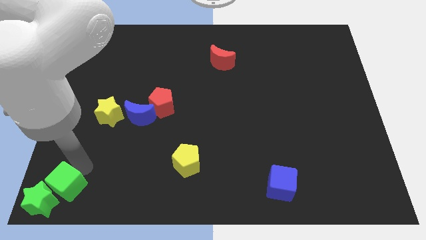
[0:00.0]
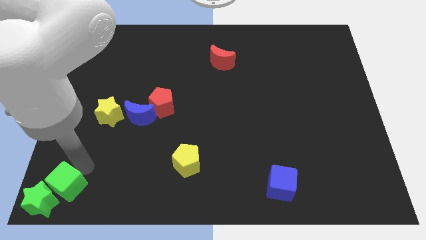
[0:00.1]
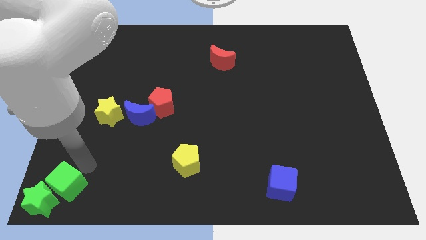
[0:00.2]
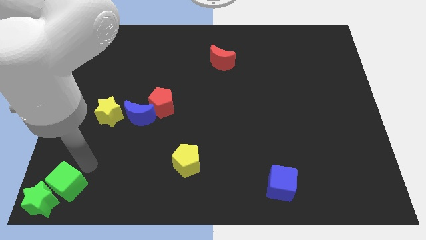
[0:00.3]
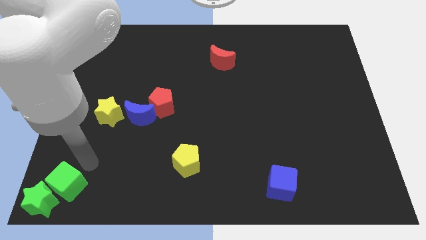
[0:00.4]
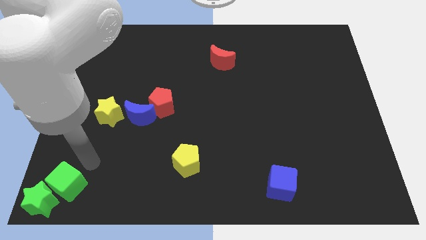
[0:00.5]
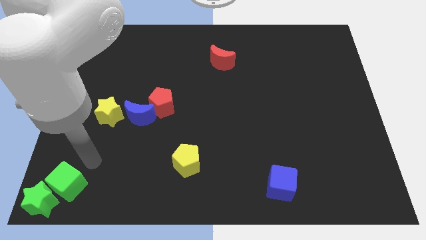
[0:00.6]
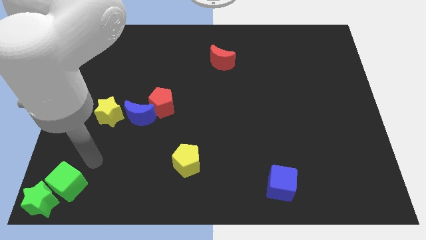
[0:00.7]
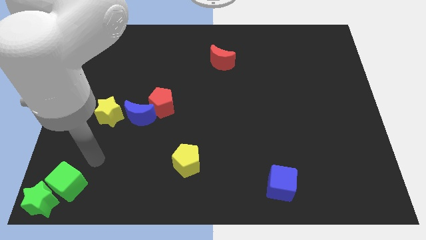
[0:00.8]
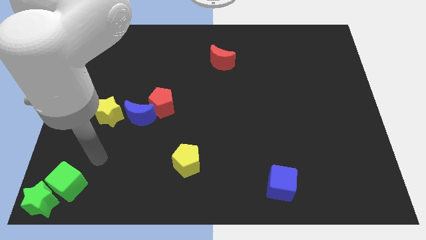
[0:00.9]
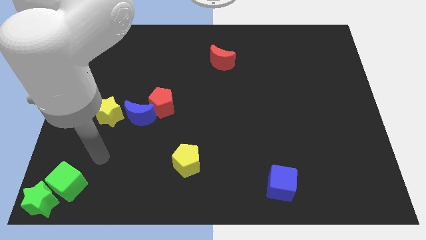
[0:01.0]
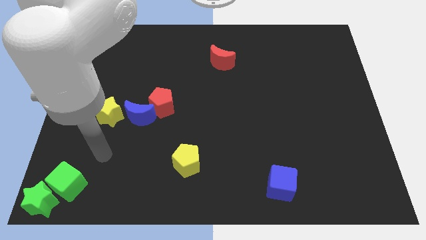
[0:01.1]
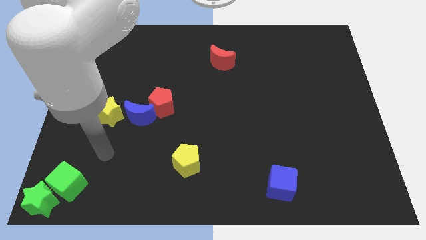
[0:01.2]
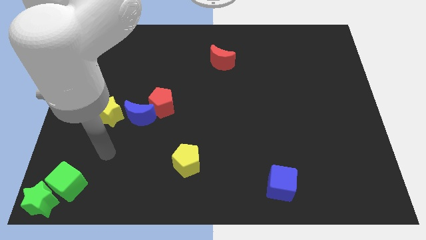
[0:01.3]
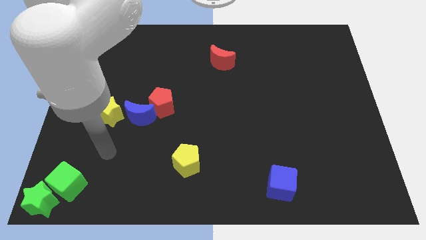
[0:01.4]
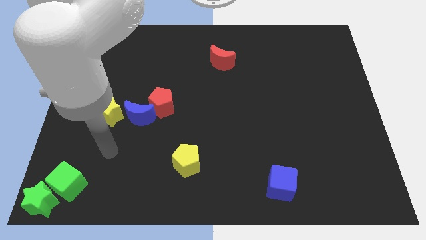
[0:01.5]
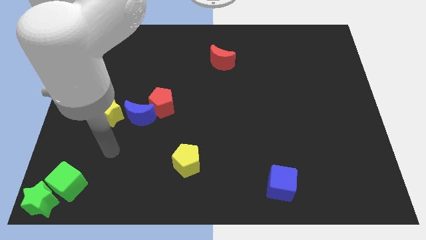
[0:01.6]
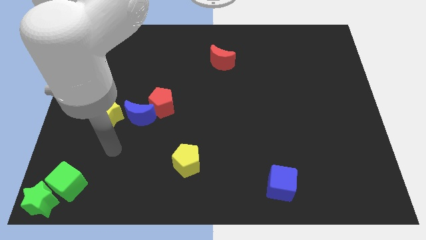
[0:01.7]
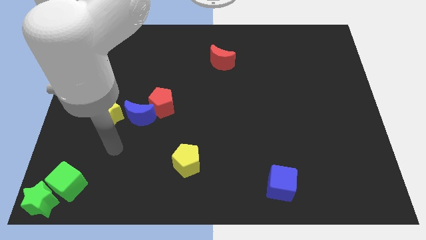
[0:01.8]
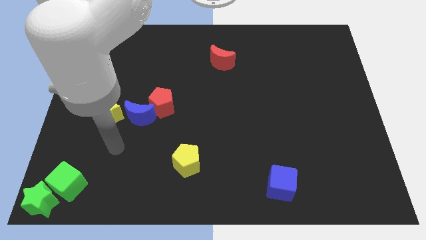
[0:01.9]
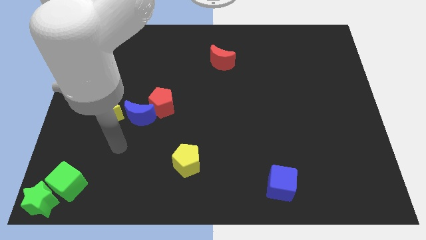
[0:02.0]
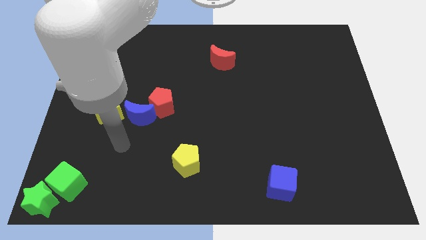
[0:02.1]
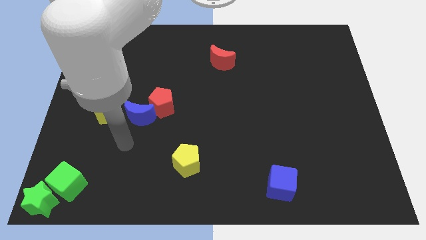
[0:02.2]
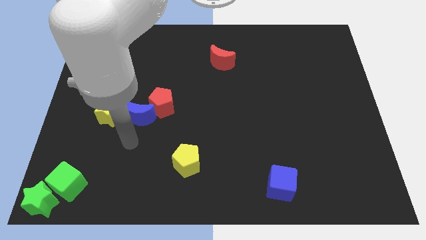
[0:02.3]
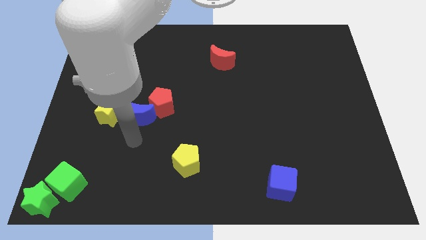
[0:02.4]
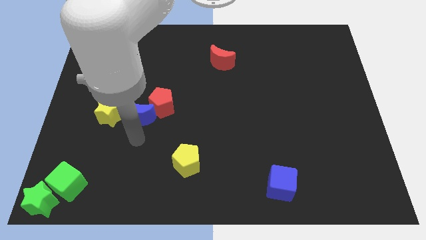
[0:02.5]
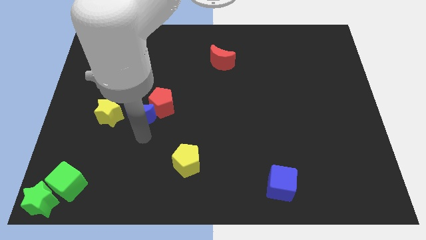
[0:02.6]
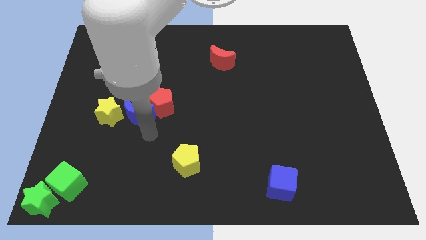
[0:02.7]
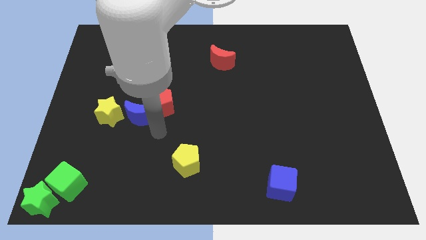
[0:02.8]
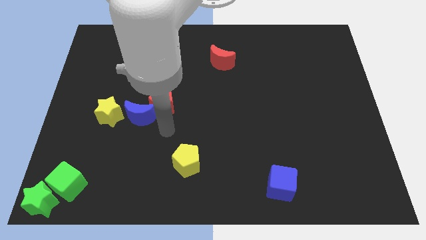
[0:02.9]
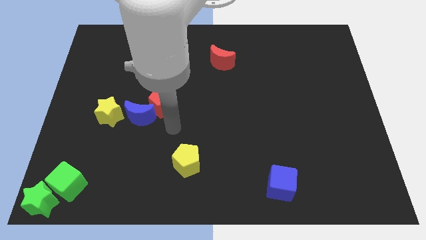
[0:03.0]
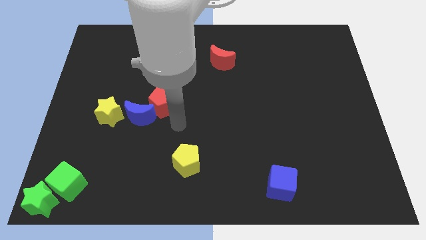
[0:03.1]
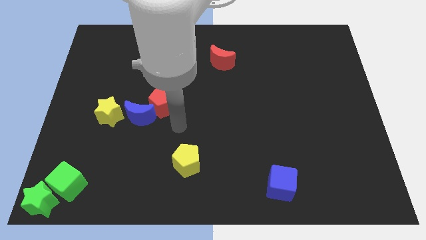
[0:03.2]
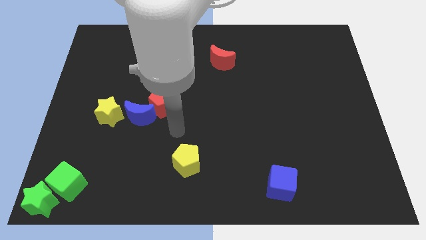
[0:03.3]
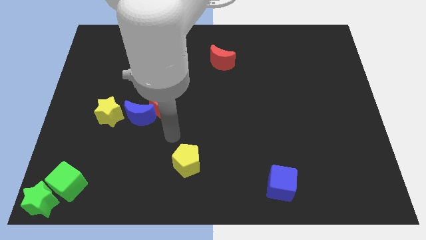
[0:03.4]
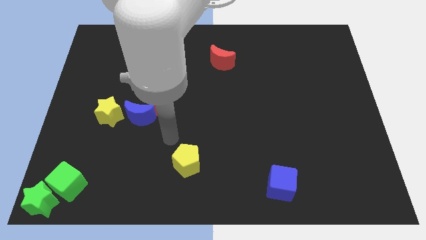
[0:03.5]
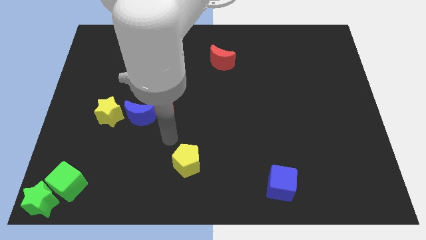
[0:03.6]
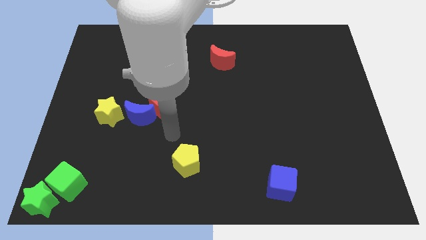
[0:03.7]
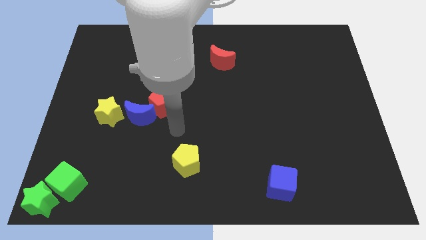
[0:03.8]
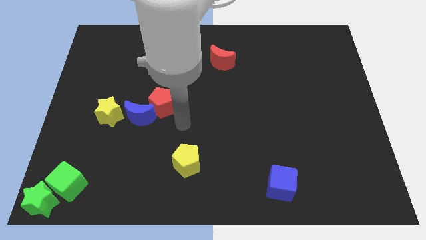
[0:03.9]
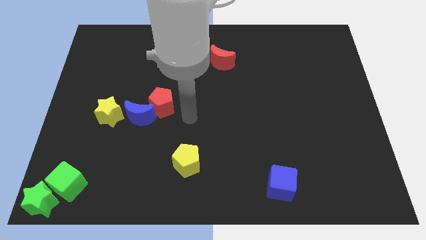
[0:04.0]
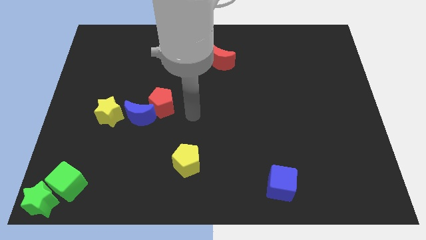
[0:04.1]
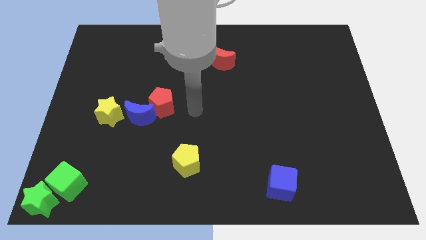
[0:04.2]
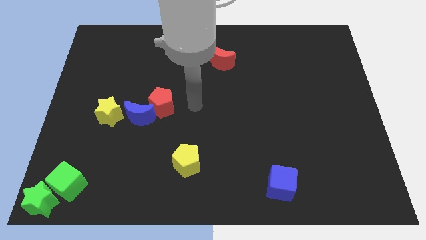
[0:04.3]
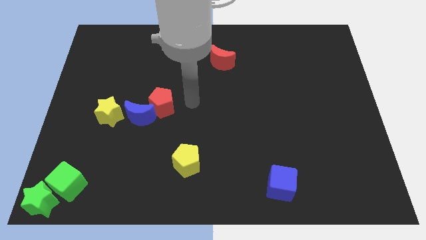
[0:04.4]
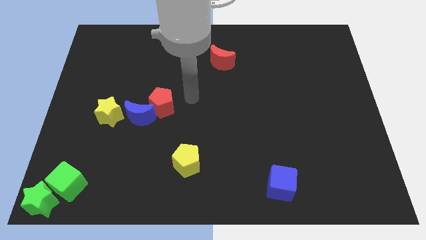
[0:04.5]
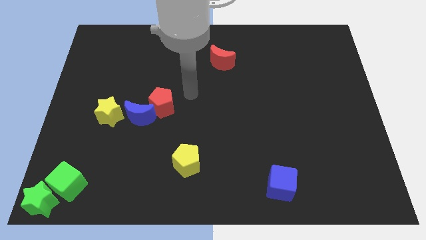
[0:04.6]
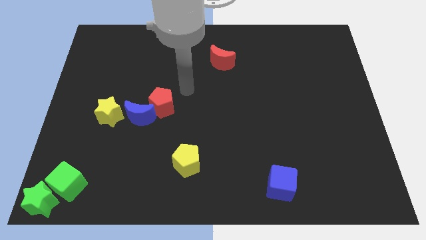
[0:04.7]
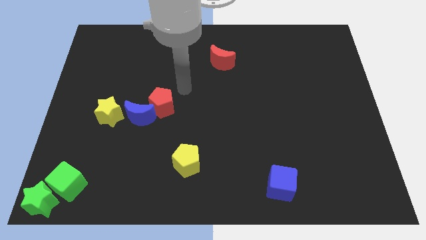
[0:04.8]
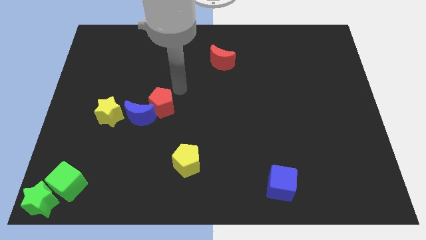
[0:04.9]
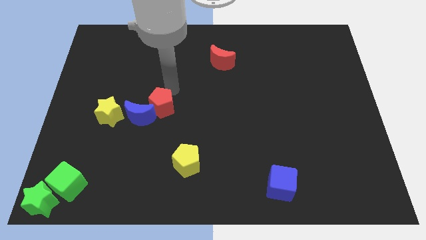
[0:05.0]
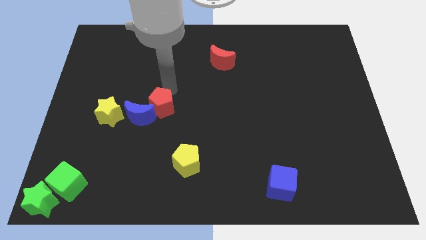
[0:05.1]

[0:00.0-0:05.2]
slide your arm to the top of red pentagon

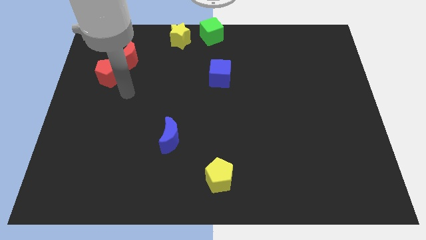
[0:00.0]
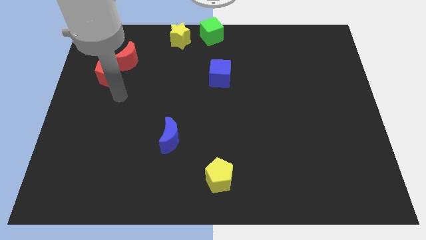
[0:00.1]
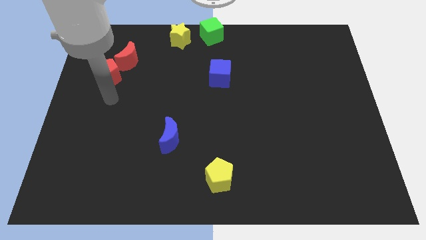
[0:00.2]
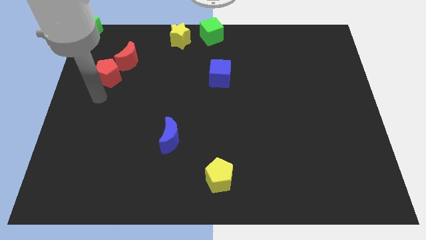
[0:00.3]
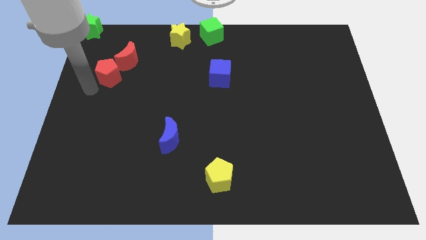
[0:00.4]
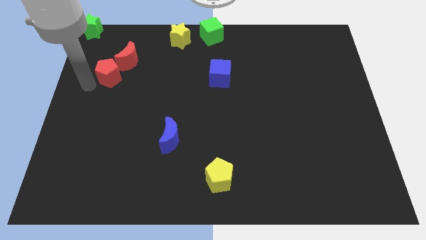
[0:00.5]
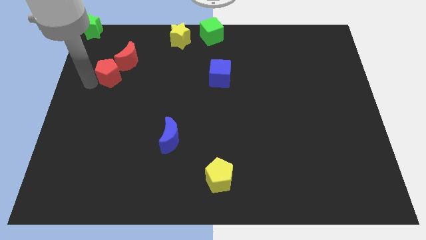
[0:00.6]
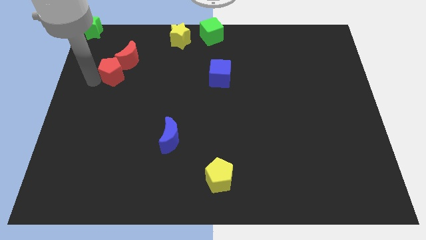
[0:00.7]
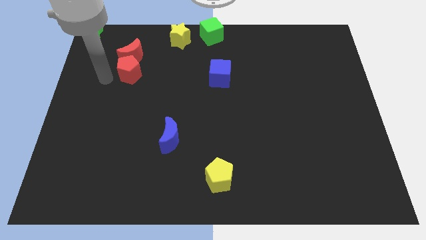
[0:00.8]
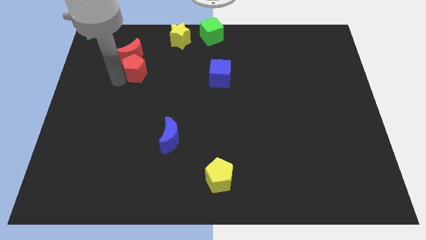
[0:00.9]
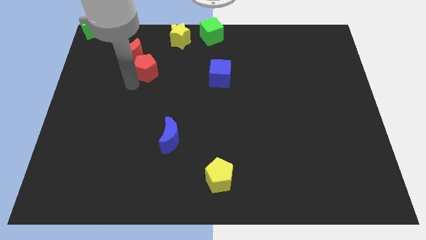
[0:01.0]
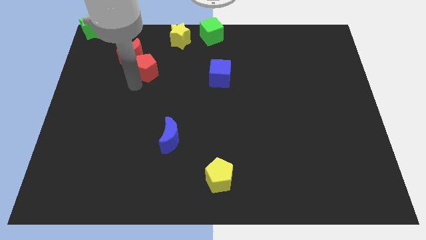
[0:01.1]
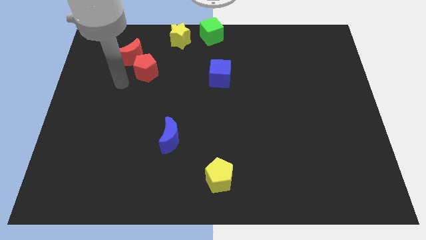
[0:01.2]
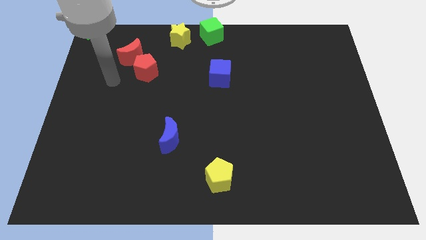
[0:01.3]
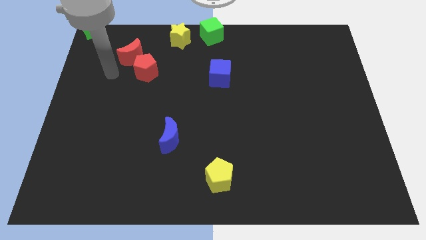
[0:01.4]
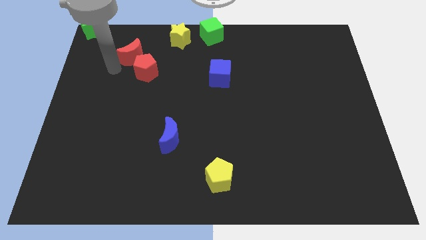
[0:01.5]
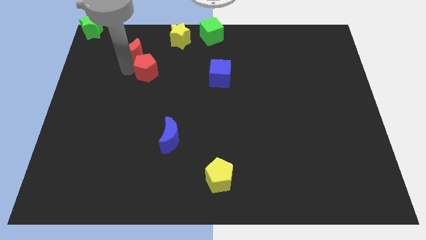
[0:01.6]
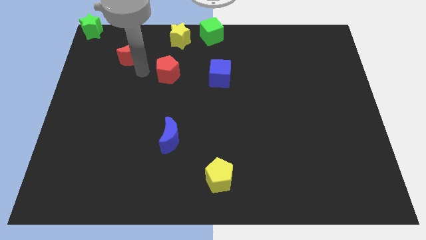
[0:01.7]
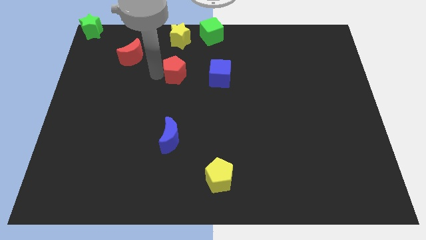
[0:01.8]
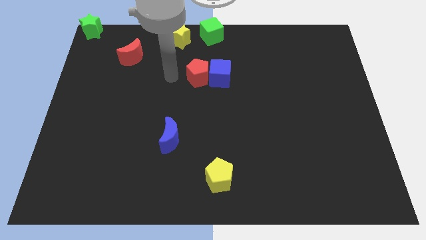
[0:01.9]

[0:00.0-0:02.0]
move red pentagon towards blue cube

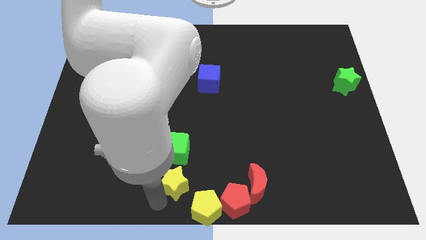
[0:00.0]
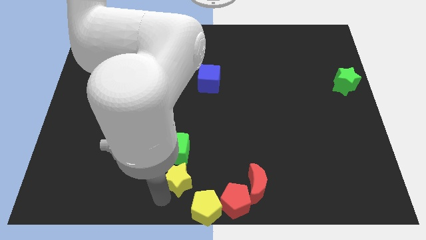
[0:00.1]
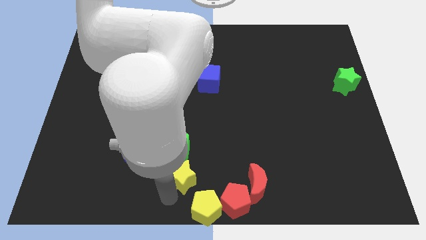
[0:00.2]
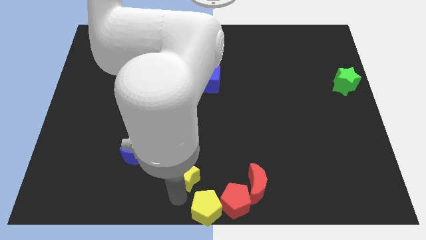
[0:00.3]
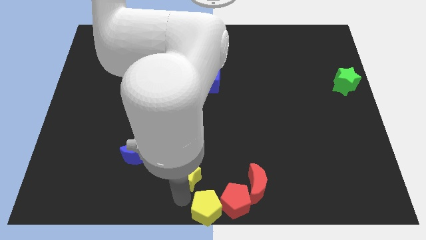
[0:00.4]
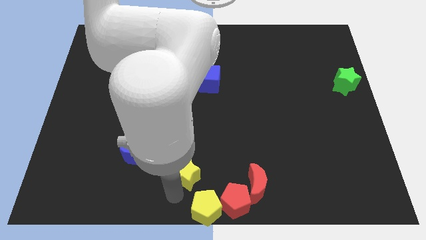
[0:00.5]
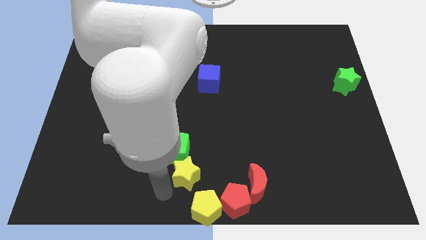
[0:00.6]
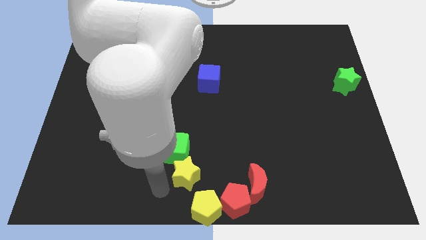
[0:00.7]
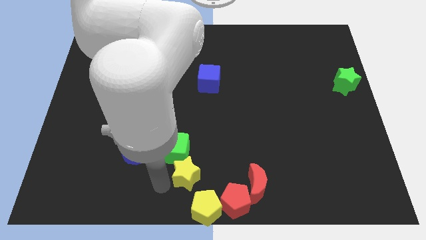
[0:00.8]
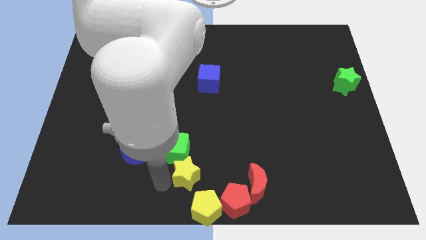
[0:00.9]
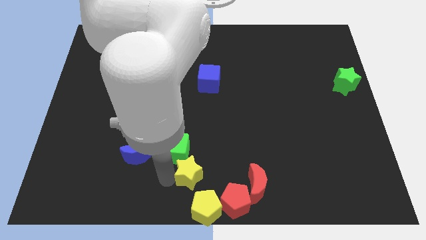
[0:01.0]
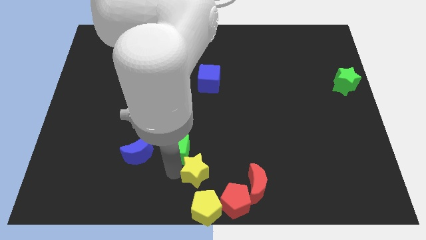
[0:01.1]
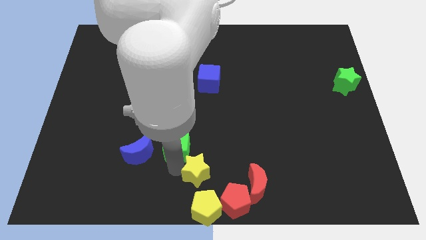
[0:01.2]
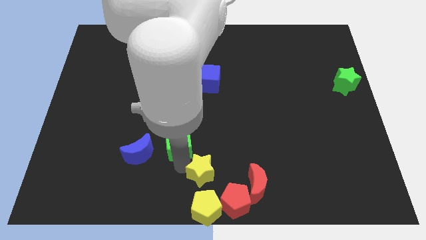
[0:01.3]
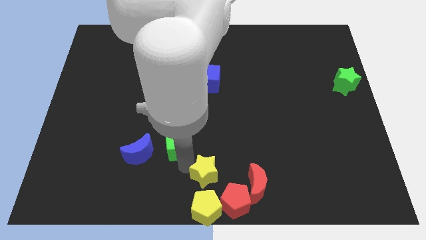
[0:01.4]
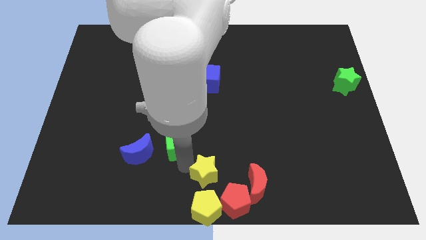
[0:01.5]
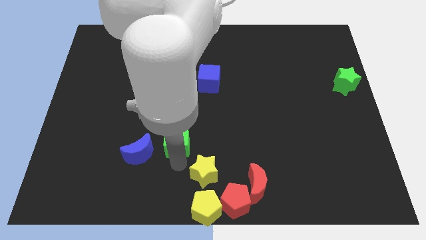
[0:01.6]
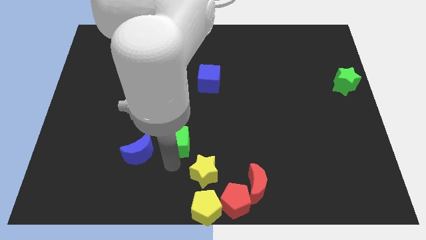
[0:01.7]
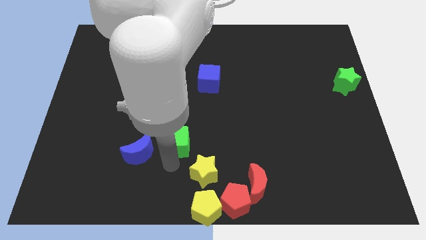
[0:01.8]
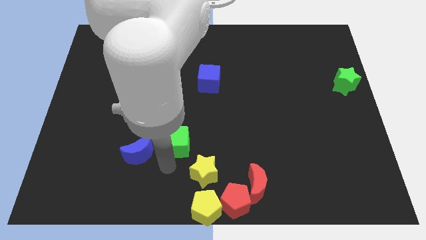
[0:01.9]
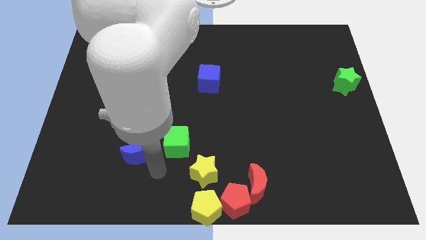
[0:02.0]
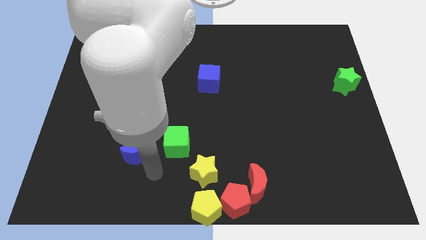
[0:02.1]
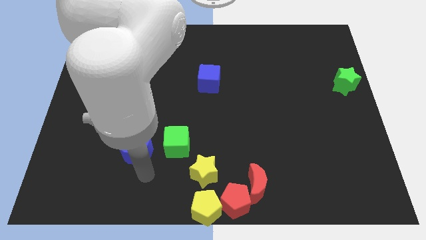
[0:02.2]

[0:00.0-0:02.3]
put the yellow star above the yellow pentagon
